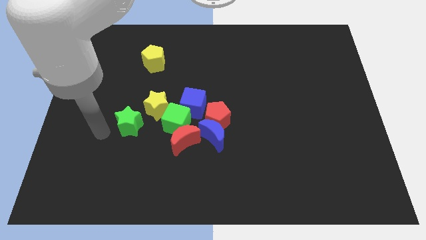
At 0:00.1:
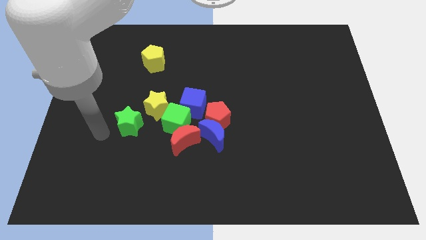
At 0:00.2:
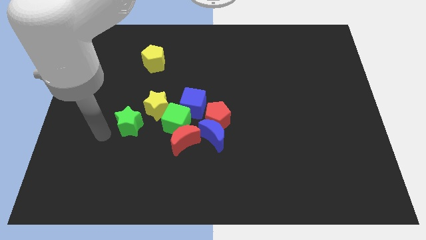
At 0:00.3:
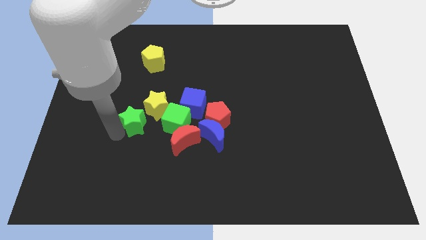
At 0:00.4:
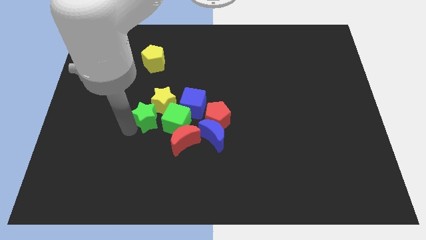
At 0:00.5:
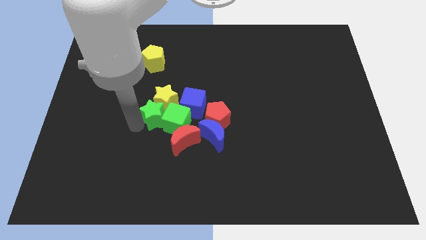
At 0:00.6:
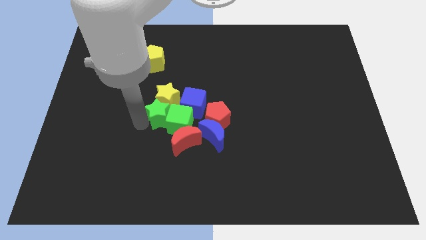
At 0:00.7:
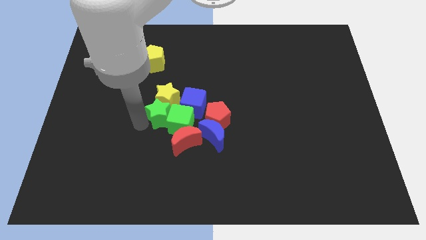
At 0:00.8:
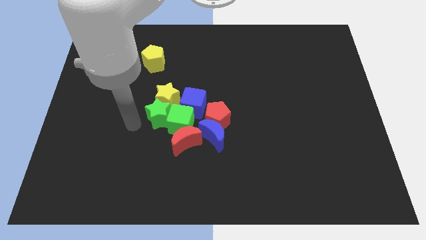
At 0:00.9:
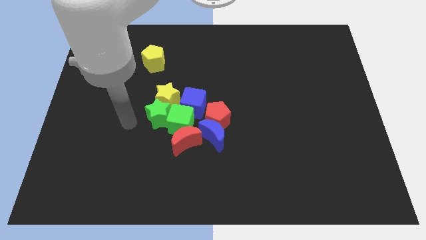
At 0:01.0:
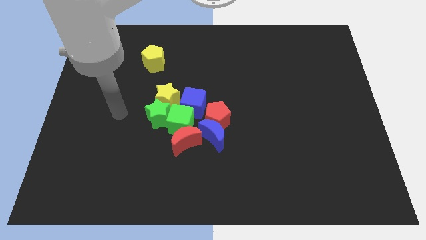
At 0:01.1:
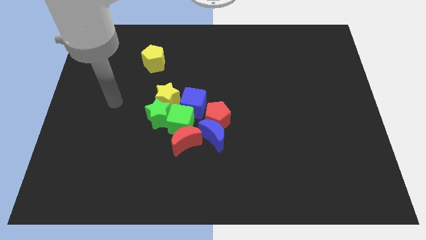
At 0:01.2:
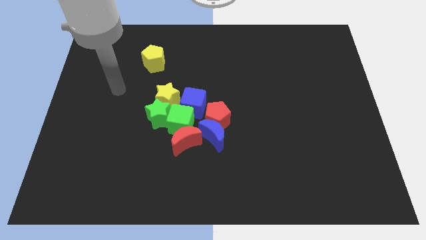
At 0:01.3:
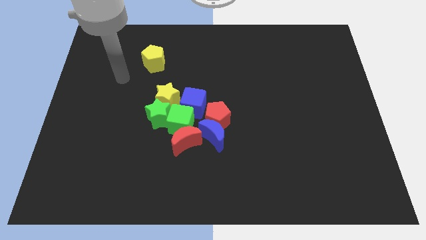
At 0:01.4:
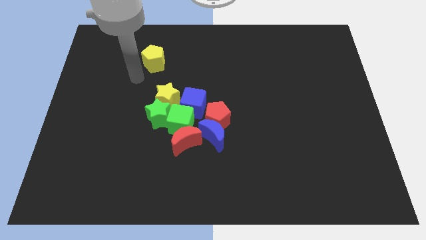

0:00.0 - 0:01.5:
slide green star into the group of blocks

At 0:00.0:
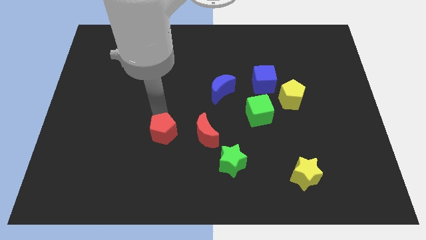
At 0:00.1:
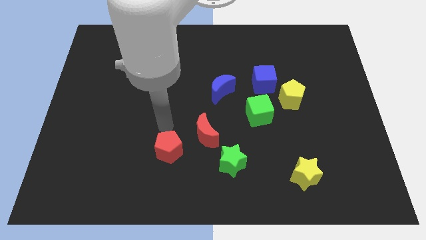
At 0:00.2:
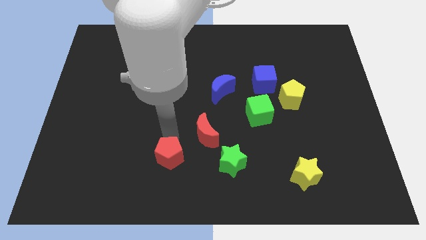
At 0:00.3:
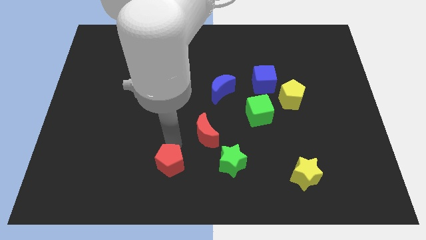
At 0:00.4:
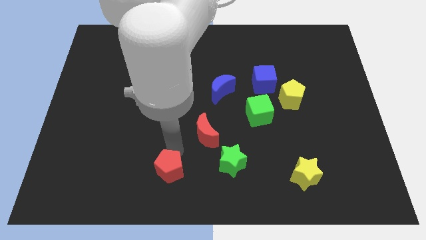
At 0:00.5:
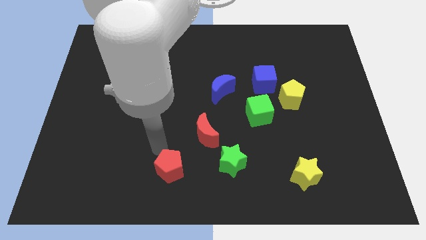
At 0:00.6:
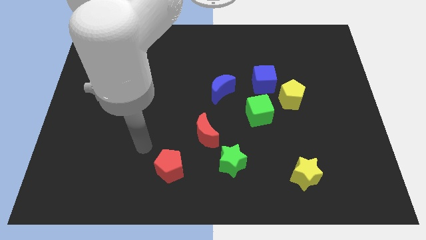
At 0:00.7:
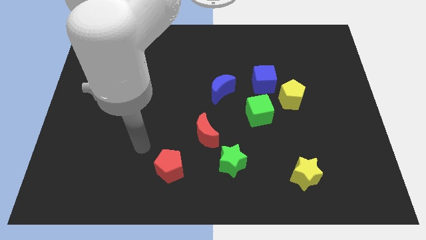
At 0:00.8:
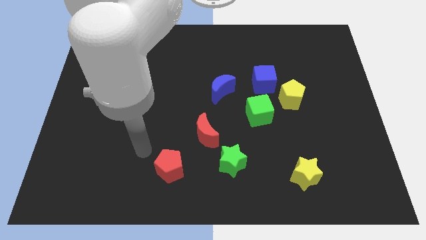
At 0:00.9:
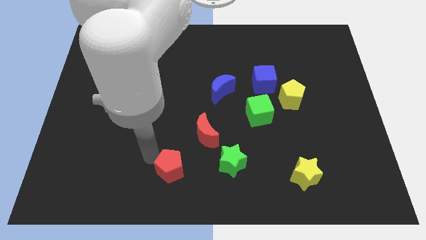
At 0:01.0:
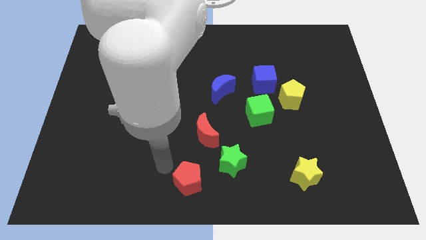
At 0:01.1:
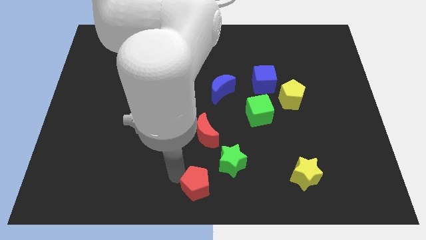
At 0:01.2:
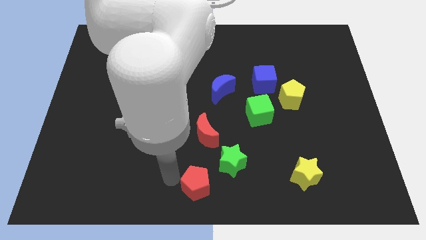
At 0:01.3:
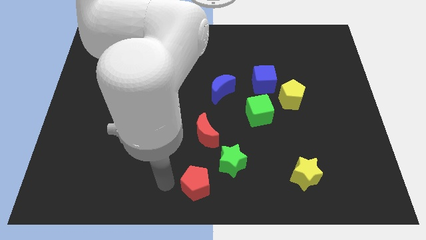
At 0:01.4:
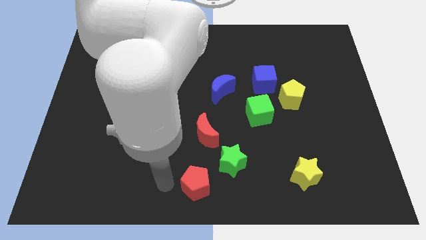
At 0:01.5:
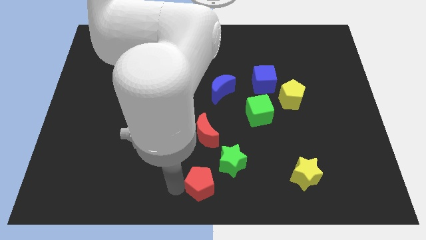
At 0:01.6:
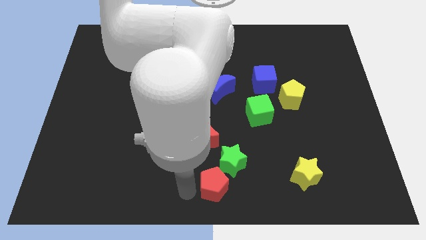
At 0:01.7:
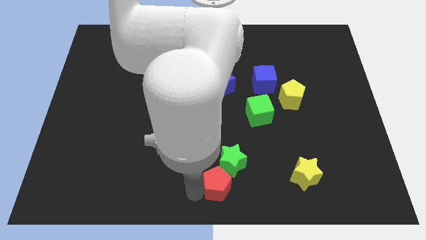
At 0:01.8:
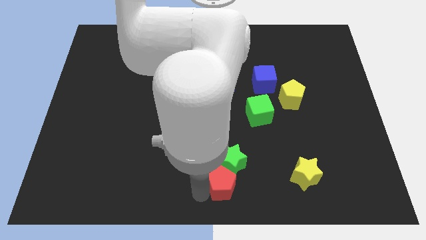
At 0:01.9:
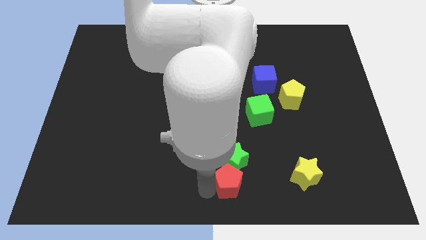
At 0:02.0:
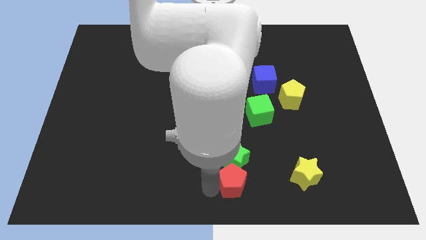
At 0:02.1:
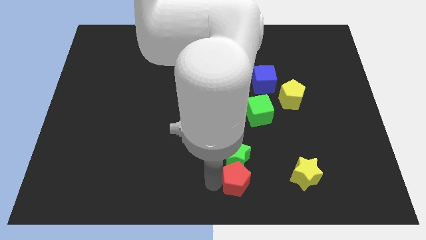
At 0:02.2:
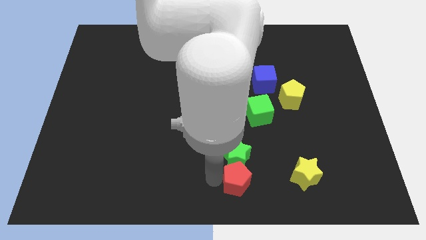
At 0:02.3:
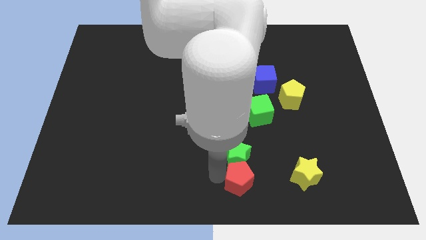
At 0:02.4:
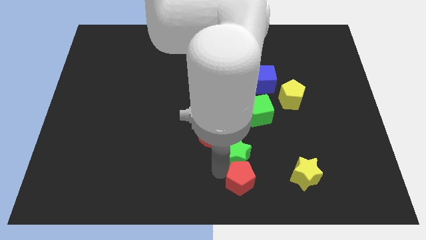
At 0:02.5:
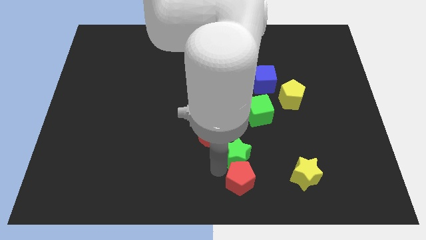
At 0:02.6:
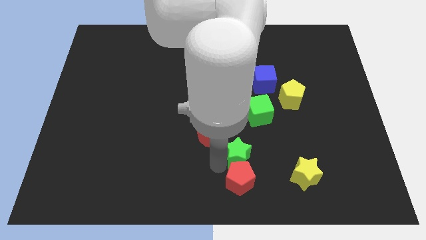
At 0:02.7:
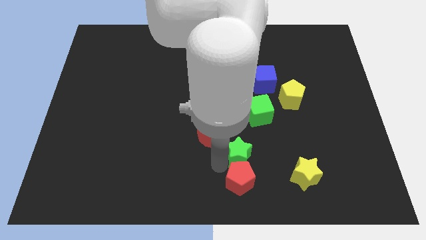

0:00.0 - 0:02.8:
move the red pentagon to the bottom side of the green star

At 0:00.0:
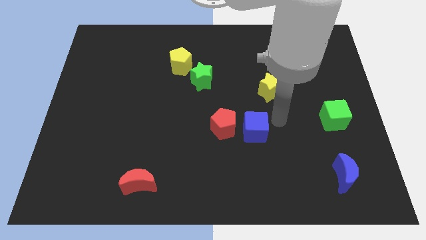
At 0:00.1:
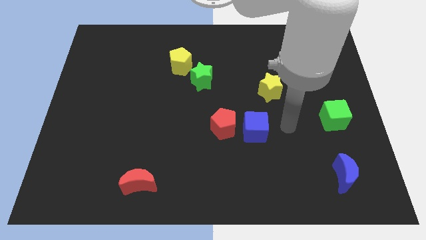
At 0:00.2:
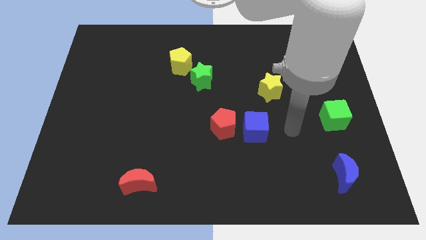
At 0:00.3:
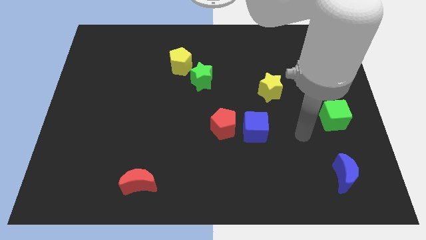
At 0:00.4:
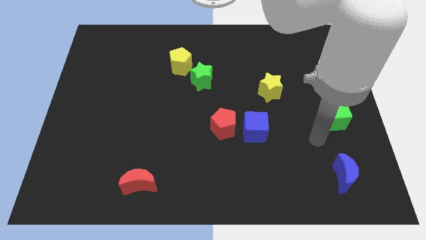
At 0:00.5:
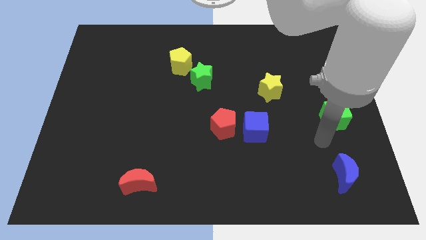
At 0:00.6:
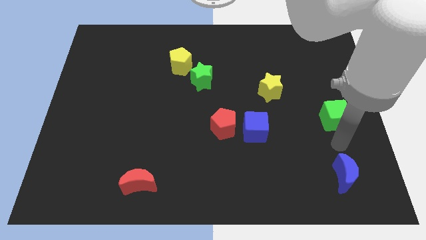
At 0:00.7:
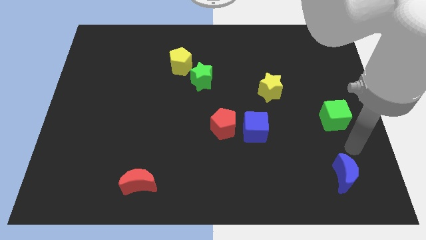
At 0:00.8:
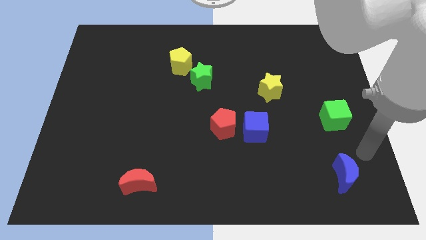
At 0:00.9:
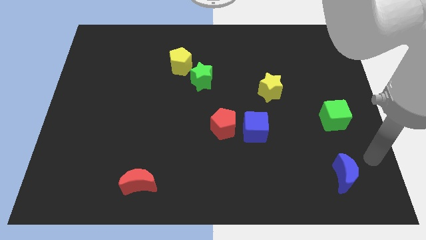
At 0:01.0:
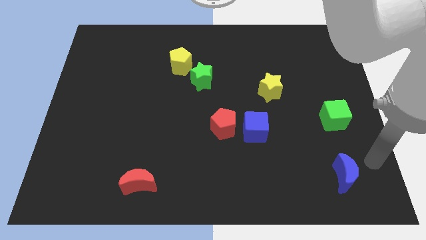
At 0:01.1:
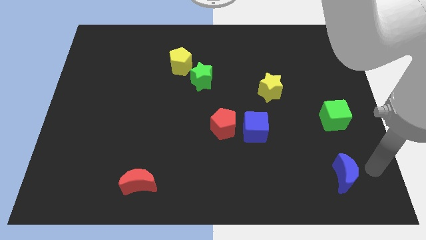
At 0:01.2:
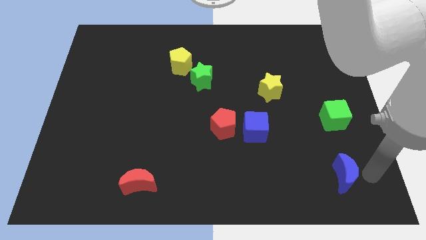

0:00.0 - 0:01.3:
go and place your hand at the right of the blue crescent

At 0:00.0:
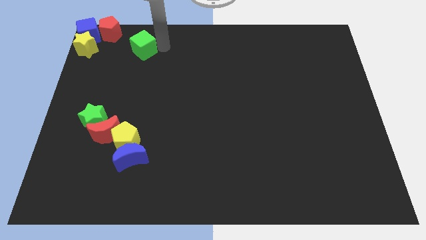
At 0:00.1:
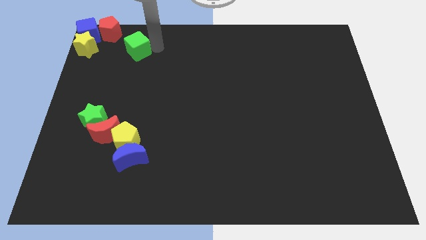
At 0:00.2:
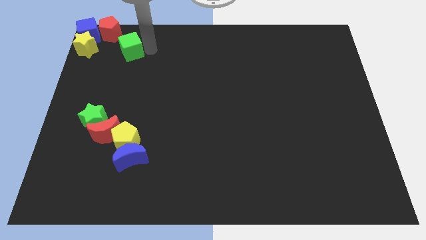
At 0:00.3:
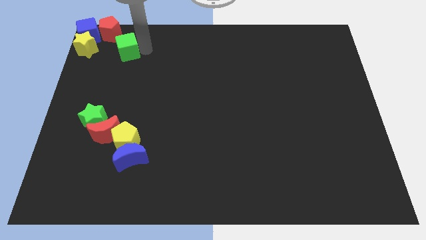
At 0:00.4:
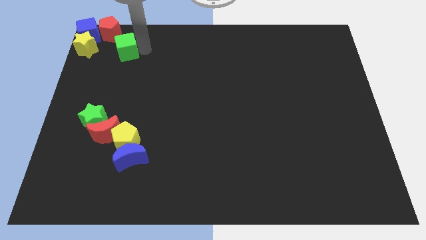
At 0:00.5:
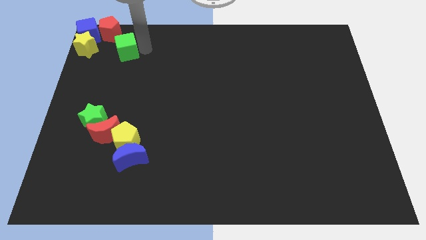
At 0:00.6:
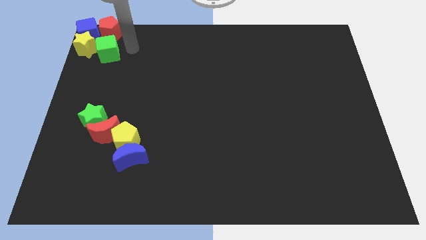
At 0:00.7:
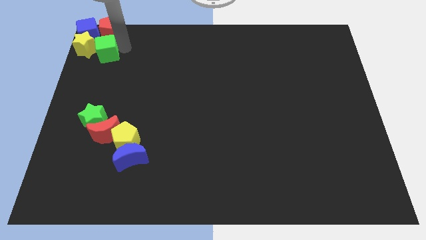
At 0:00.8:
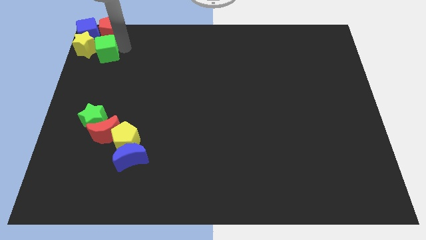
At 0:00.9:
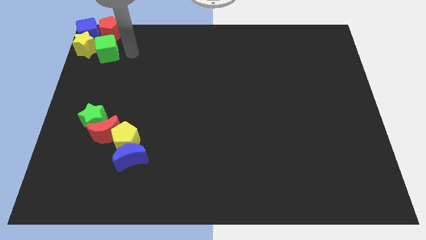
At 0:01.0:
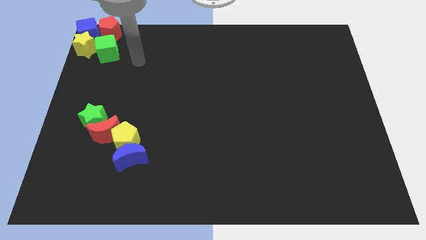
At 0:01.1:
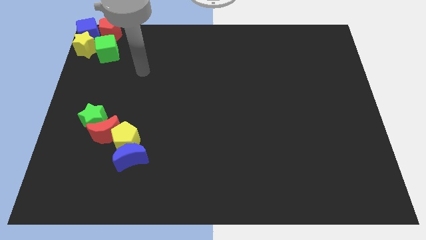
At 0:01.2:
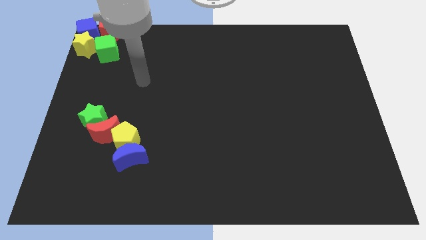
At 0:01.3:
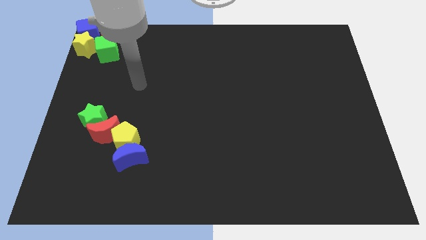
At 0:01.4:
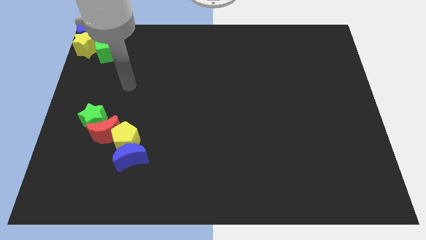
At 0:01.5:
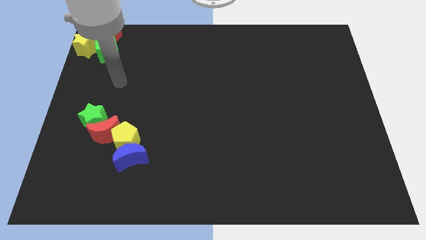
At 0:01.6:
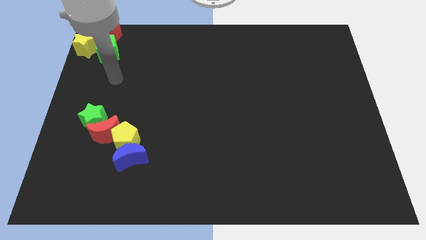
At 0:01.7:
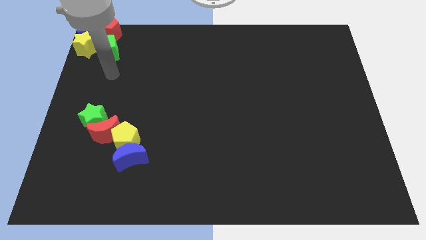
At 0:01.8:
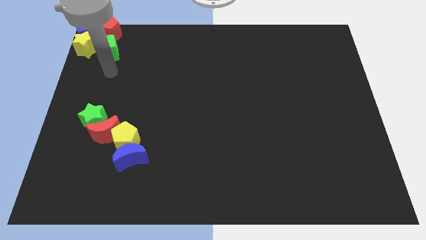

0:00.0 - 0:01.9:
place the green cube above the green star

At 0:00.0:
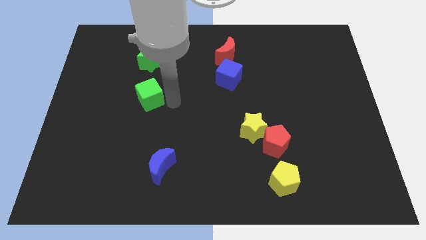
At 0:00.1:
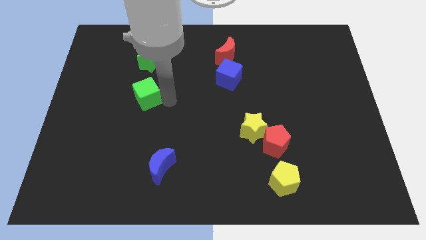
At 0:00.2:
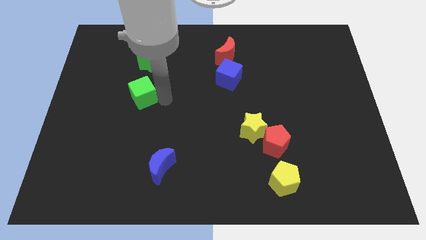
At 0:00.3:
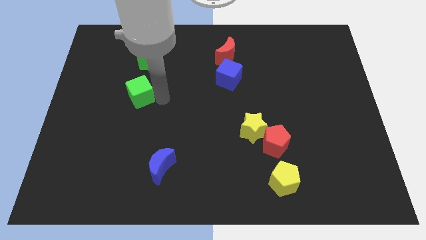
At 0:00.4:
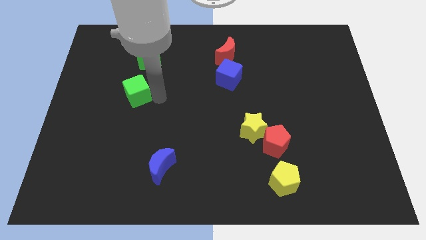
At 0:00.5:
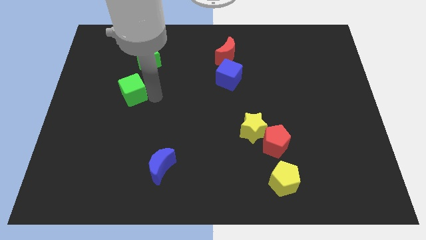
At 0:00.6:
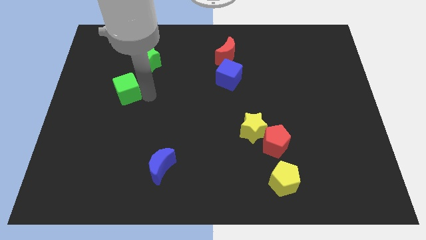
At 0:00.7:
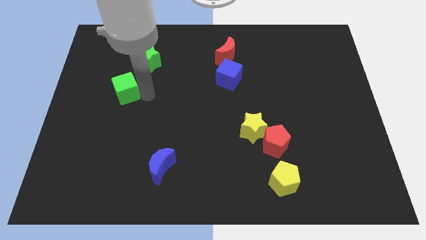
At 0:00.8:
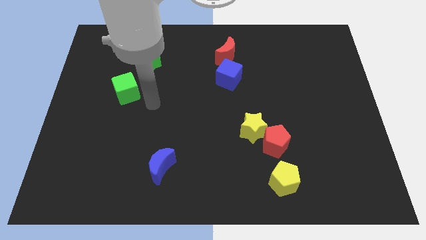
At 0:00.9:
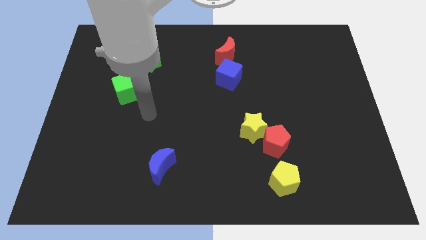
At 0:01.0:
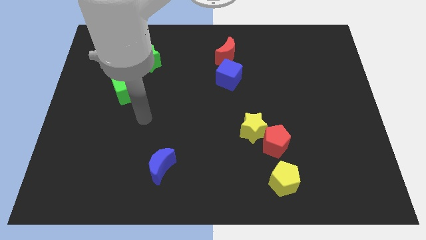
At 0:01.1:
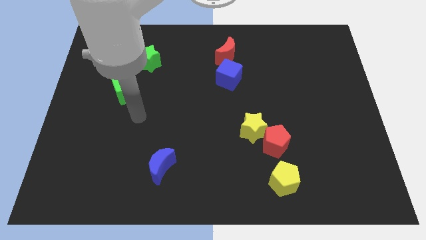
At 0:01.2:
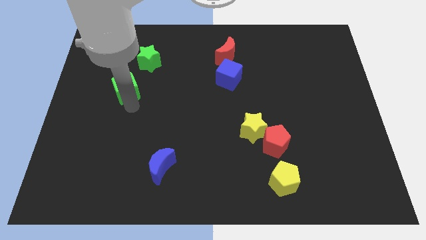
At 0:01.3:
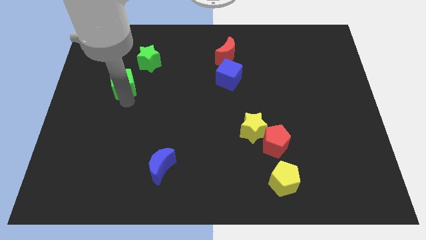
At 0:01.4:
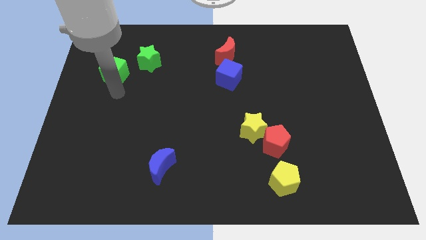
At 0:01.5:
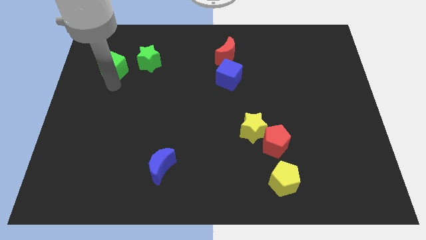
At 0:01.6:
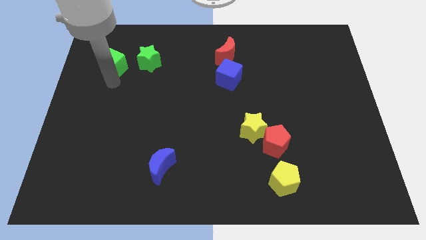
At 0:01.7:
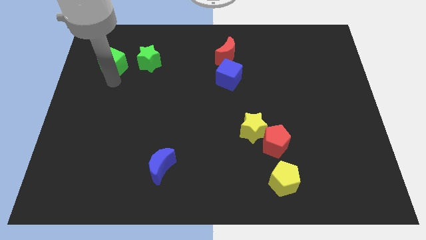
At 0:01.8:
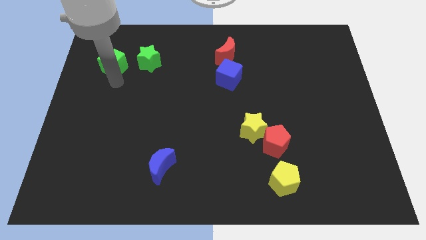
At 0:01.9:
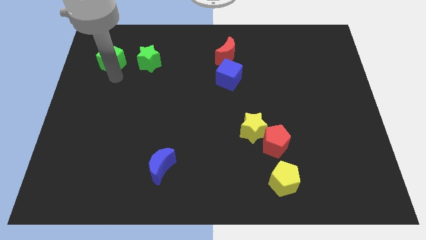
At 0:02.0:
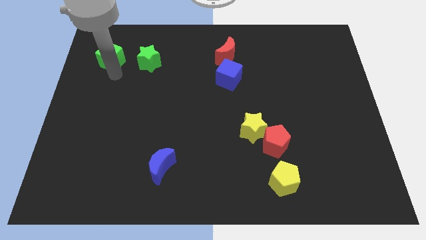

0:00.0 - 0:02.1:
place green cube to the left of green star
